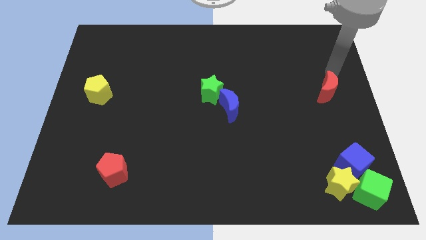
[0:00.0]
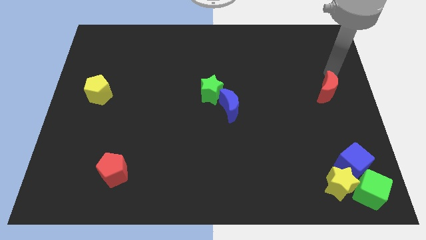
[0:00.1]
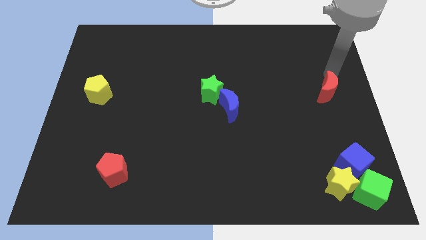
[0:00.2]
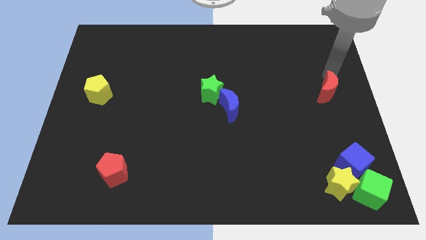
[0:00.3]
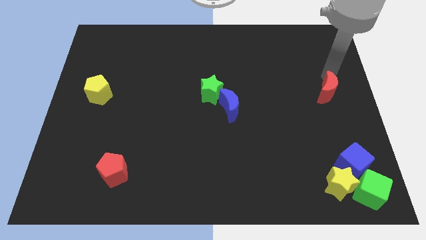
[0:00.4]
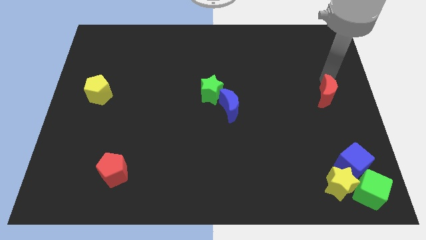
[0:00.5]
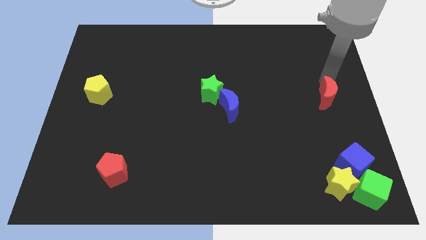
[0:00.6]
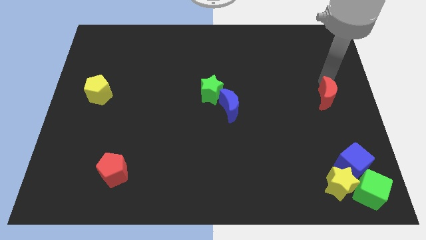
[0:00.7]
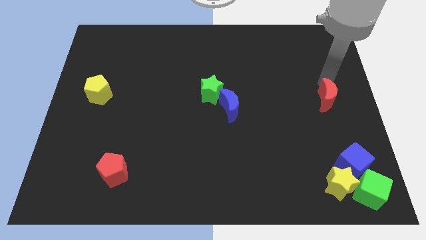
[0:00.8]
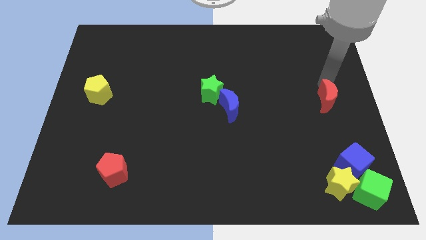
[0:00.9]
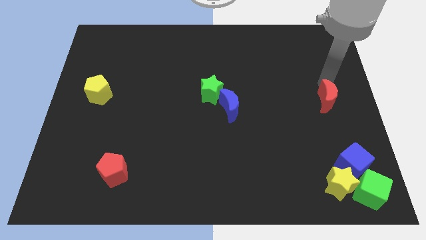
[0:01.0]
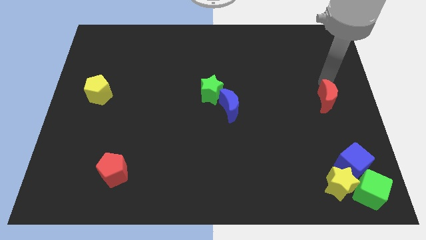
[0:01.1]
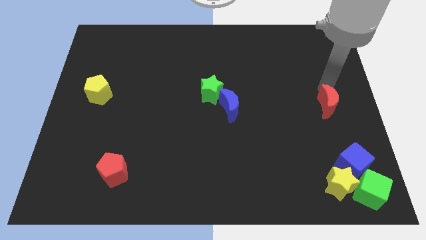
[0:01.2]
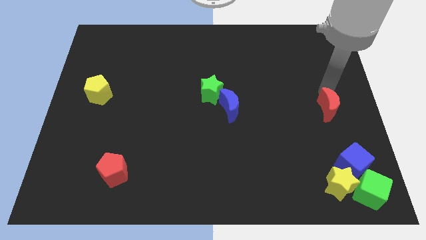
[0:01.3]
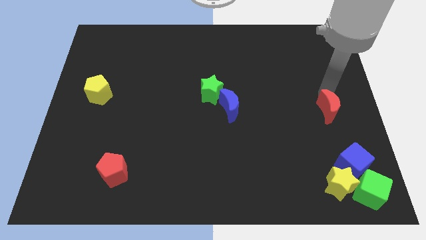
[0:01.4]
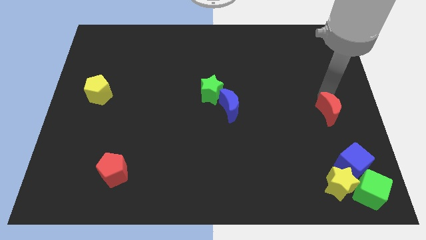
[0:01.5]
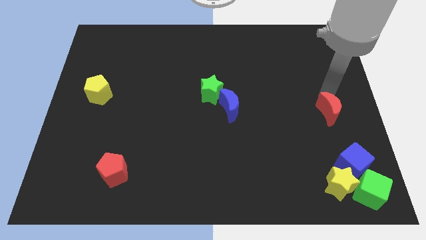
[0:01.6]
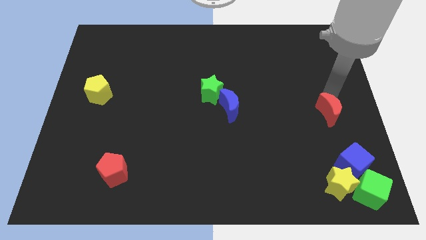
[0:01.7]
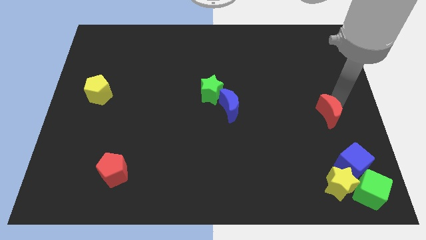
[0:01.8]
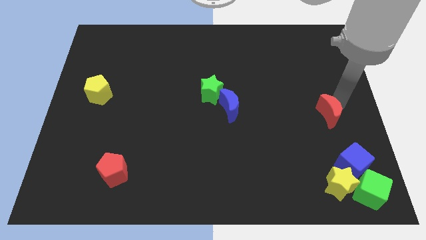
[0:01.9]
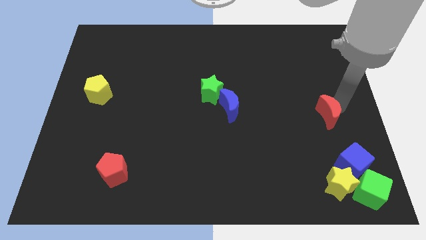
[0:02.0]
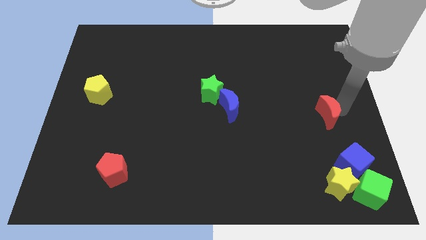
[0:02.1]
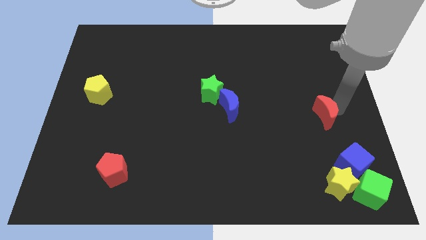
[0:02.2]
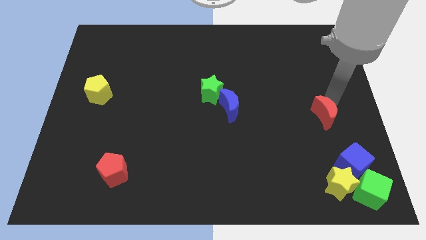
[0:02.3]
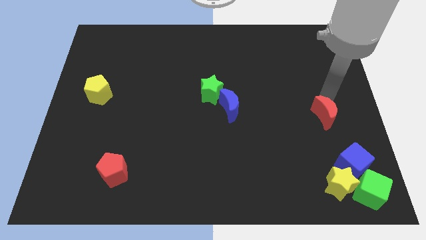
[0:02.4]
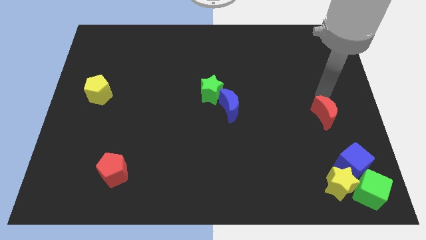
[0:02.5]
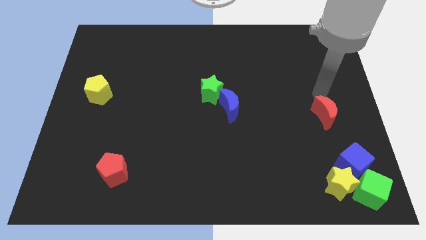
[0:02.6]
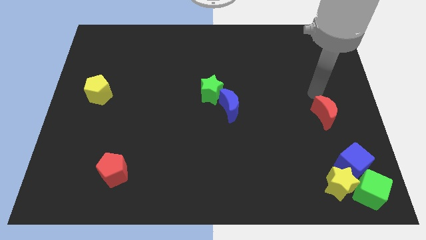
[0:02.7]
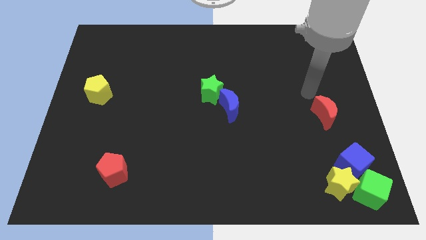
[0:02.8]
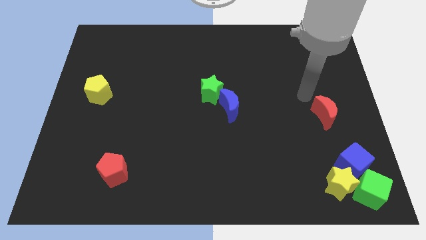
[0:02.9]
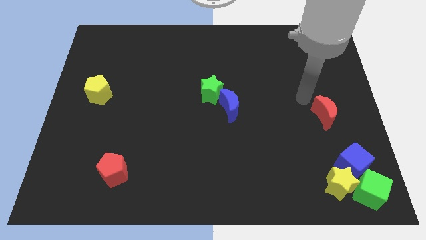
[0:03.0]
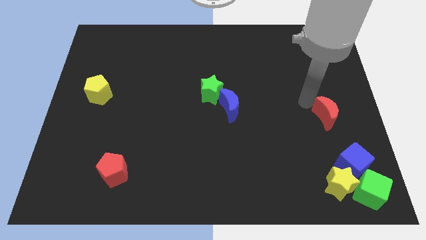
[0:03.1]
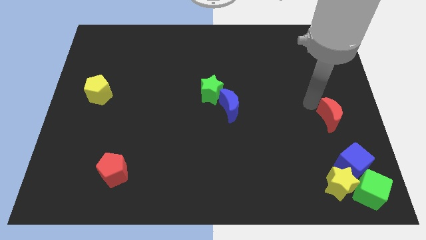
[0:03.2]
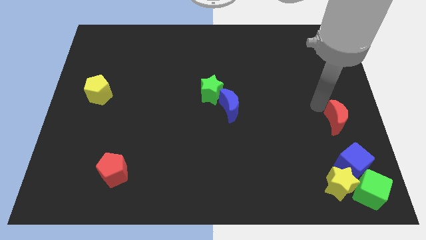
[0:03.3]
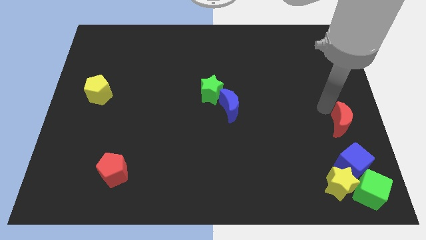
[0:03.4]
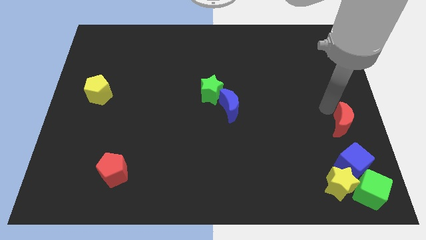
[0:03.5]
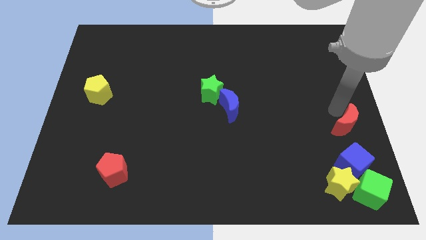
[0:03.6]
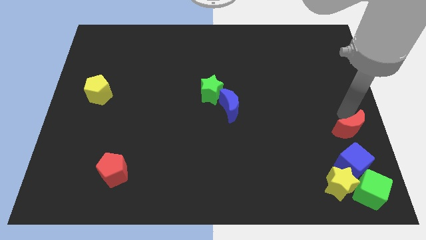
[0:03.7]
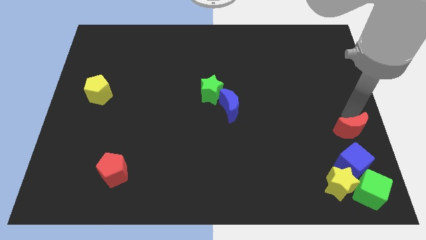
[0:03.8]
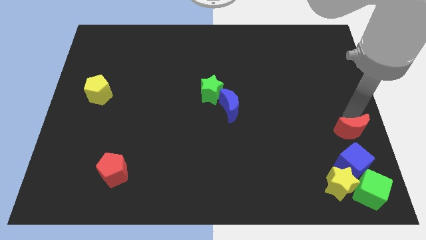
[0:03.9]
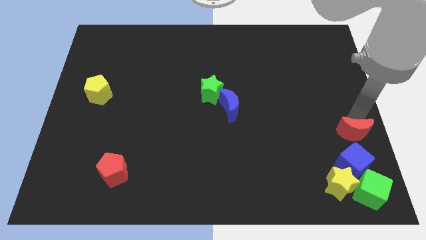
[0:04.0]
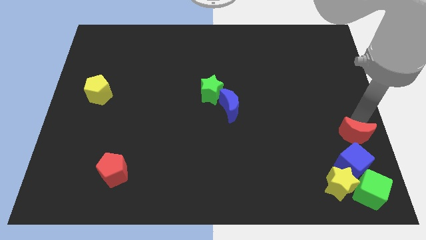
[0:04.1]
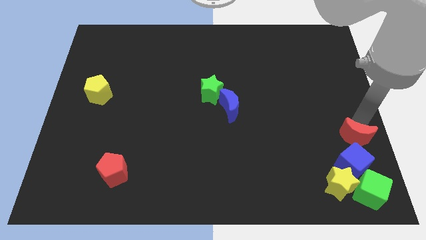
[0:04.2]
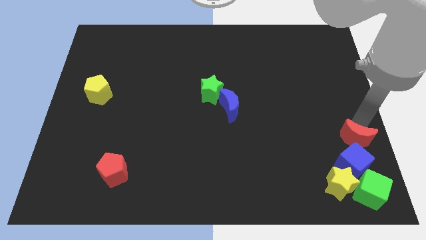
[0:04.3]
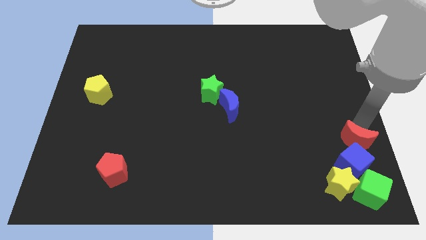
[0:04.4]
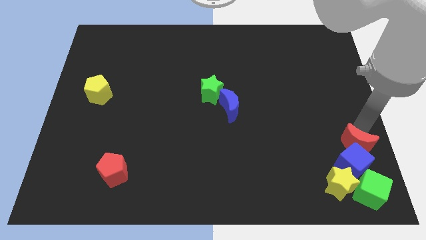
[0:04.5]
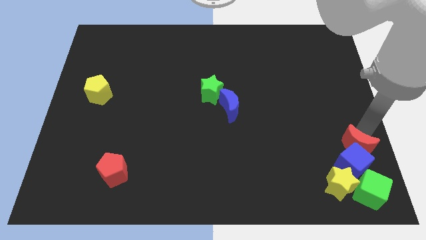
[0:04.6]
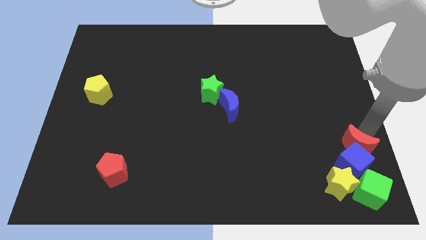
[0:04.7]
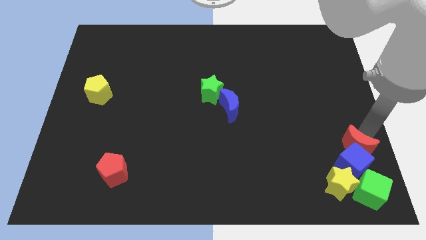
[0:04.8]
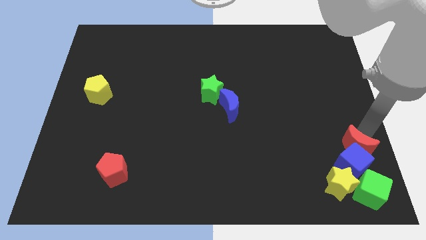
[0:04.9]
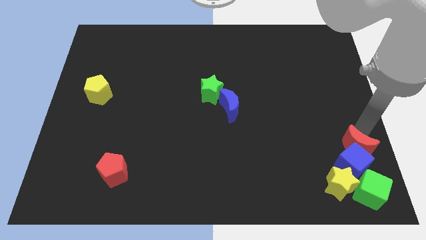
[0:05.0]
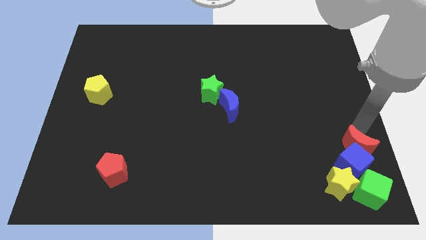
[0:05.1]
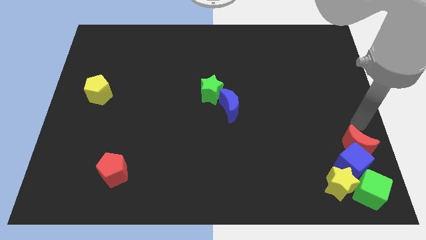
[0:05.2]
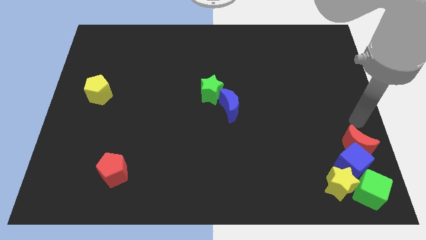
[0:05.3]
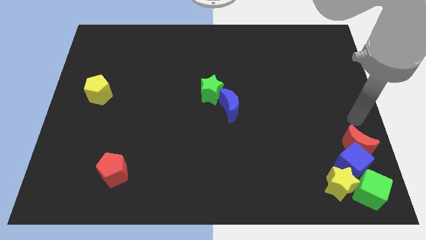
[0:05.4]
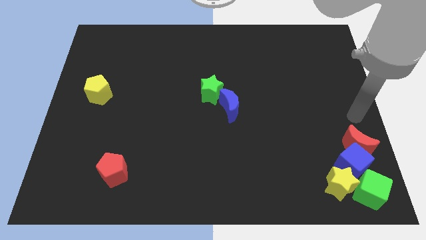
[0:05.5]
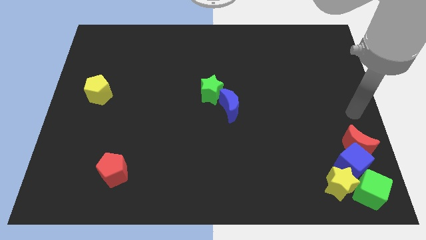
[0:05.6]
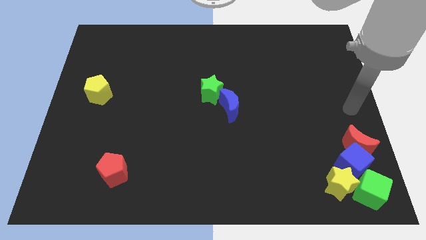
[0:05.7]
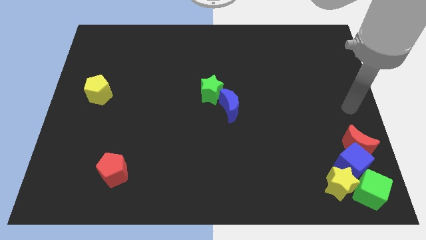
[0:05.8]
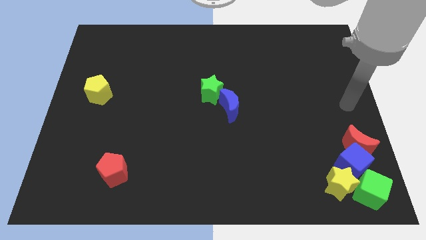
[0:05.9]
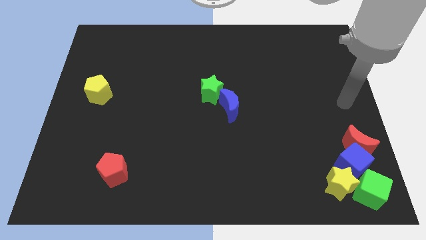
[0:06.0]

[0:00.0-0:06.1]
slide red moon into blue cube

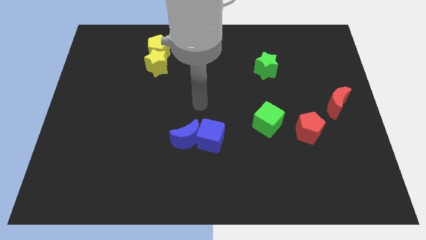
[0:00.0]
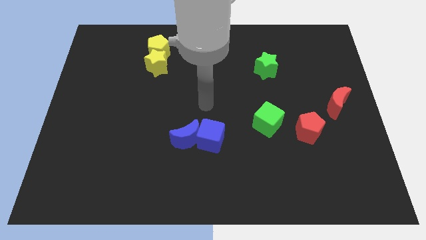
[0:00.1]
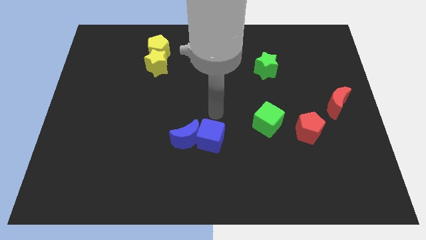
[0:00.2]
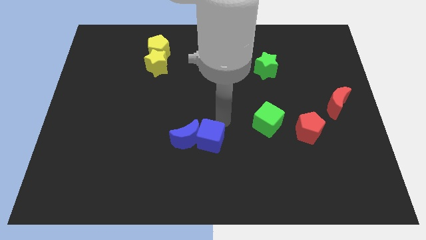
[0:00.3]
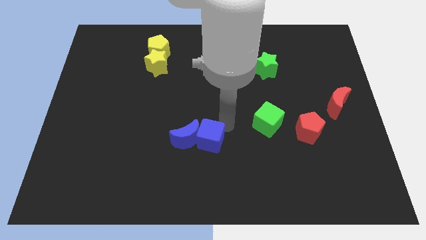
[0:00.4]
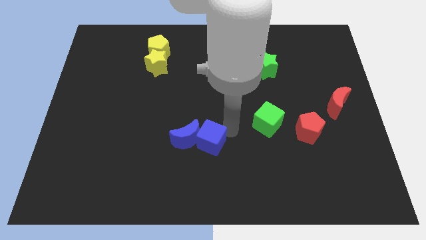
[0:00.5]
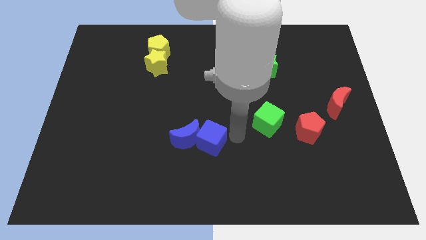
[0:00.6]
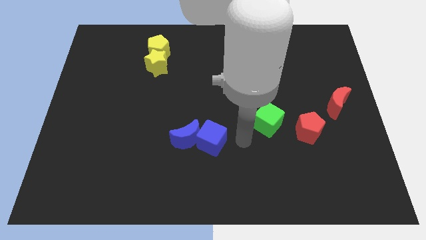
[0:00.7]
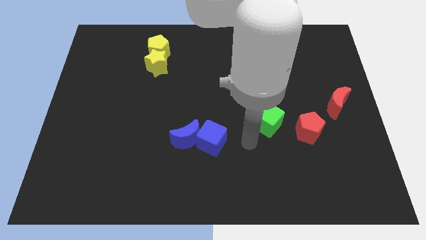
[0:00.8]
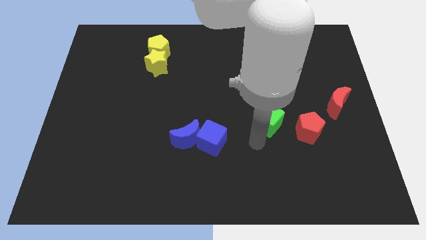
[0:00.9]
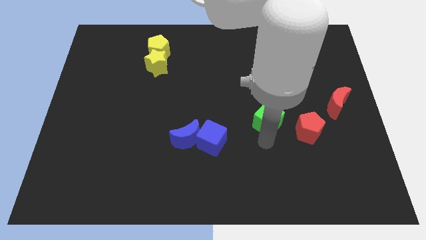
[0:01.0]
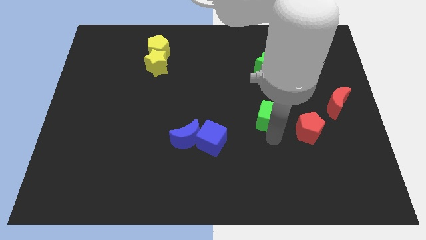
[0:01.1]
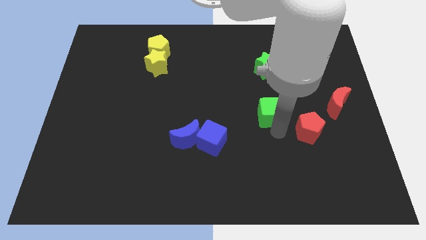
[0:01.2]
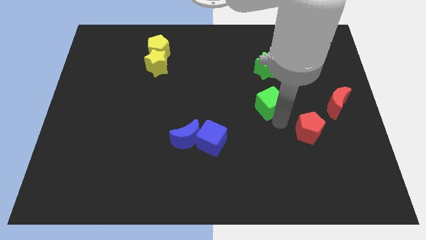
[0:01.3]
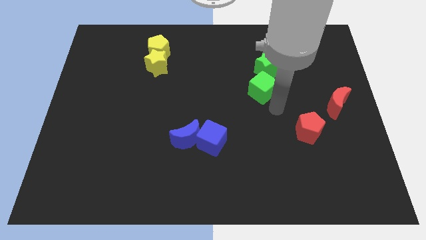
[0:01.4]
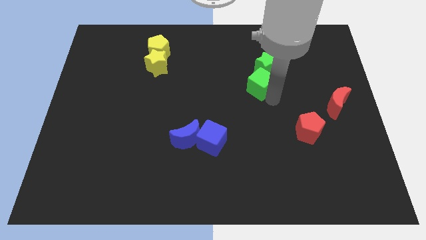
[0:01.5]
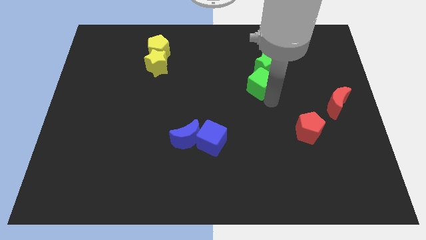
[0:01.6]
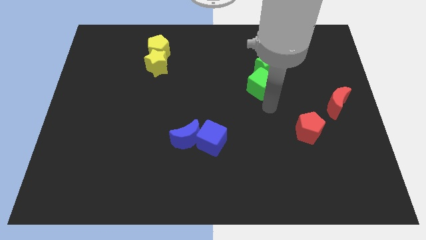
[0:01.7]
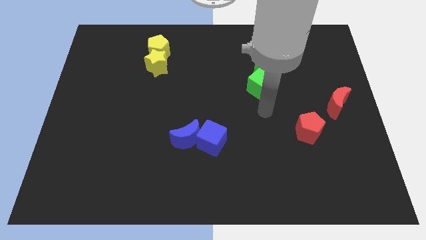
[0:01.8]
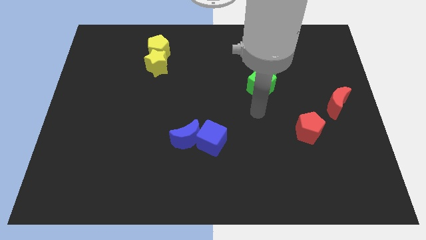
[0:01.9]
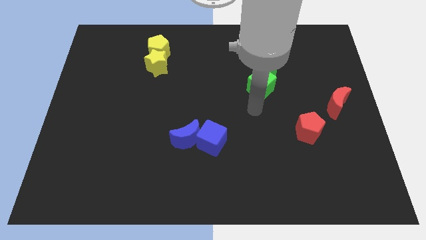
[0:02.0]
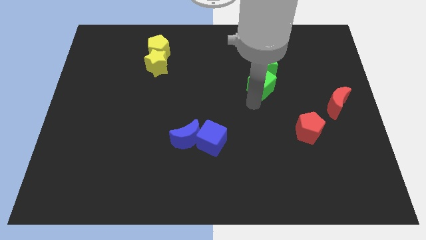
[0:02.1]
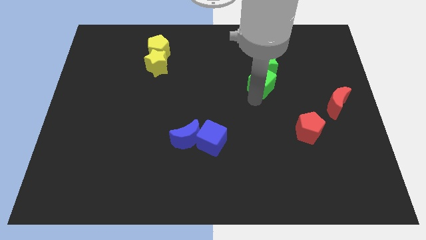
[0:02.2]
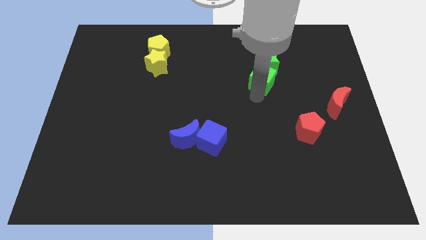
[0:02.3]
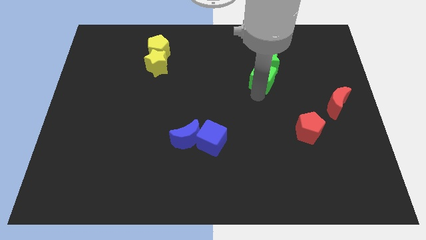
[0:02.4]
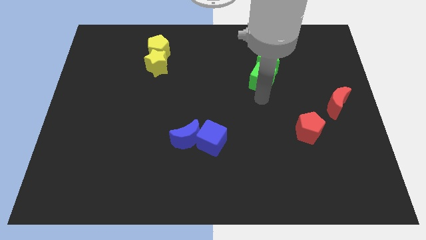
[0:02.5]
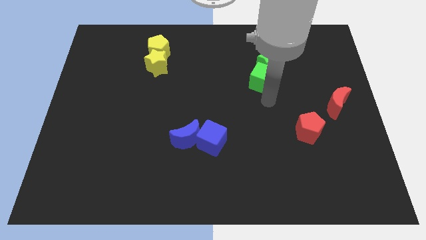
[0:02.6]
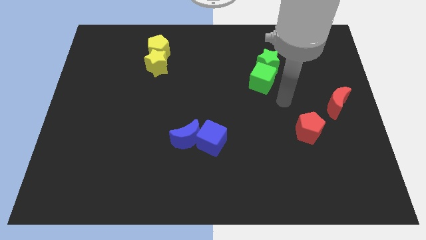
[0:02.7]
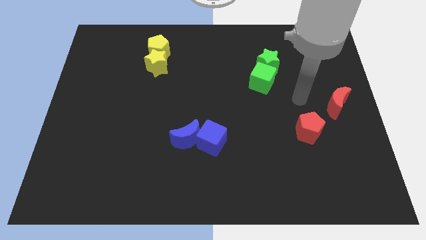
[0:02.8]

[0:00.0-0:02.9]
push the green cube close to the bottom of the green star

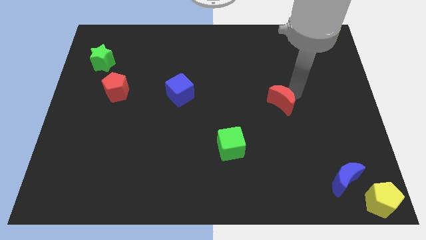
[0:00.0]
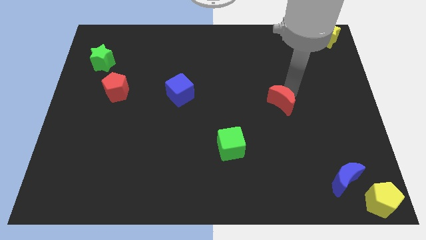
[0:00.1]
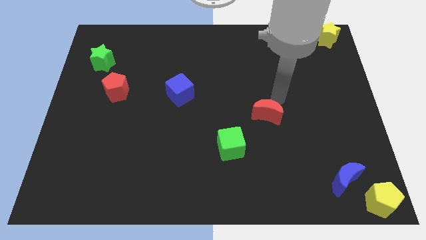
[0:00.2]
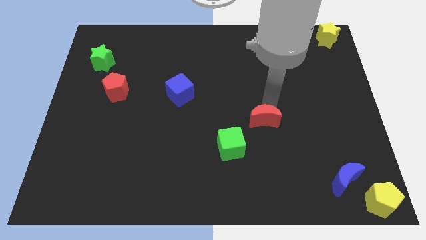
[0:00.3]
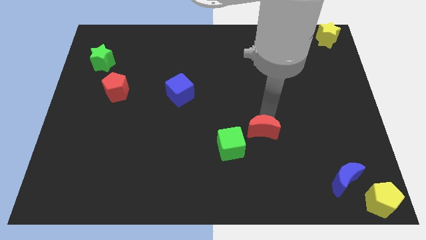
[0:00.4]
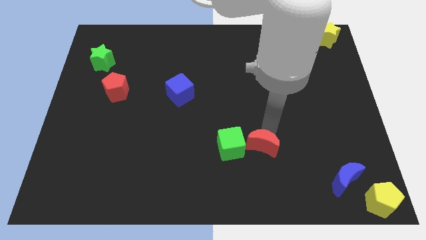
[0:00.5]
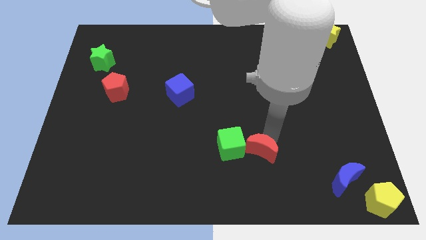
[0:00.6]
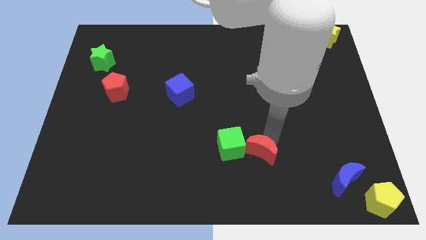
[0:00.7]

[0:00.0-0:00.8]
move the red crescent into the green cube
